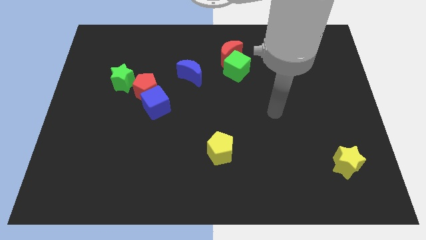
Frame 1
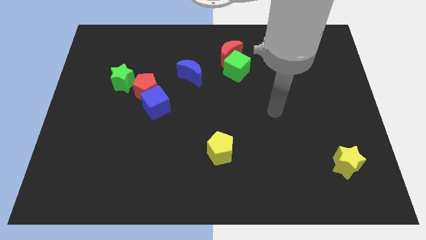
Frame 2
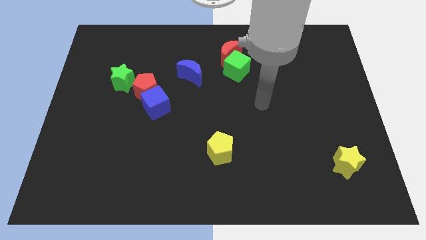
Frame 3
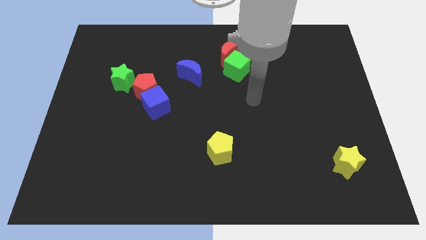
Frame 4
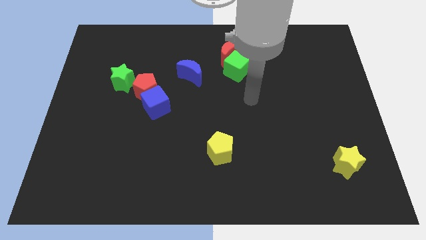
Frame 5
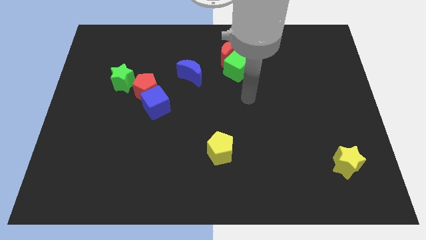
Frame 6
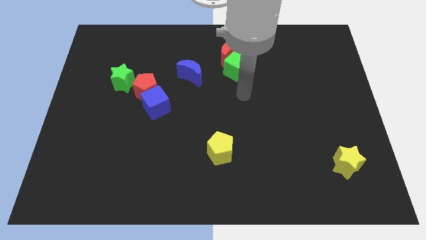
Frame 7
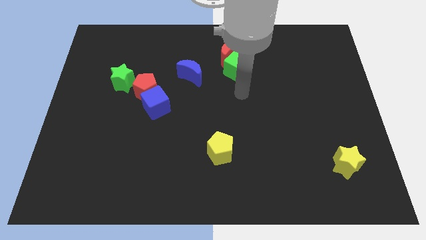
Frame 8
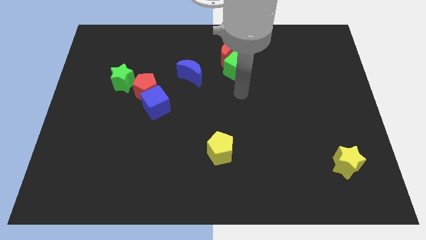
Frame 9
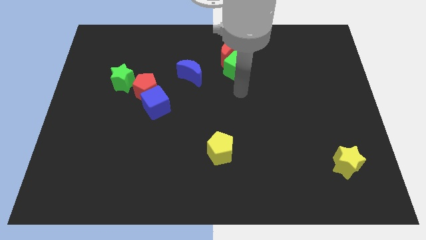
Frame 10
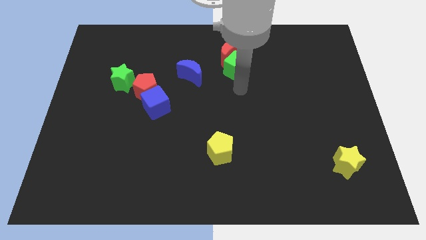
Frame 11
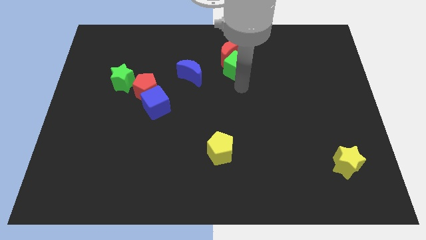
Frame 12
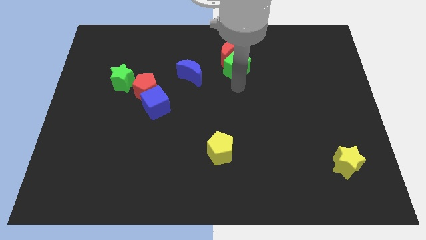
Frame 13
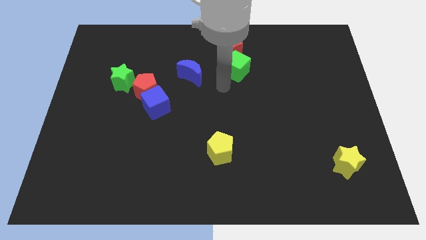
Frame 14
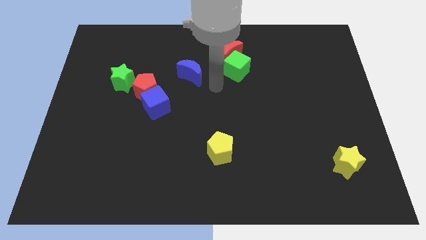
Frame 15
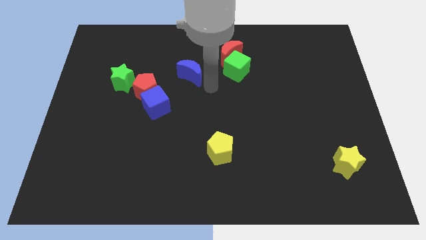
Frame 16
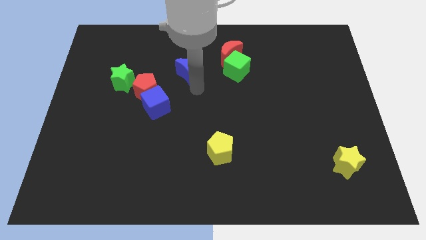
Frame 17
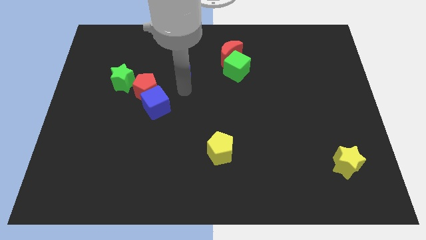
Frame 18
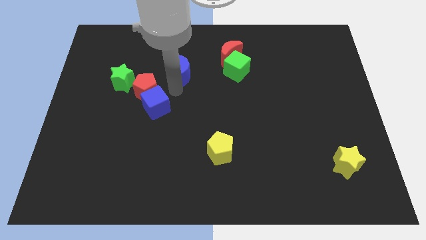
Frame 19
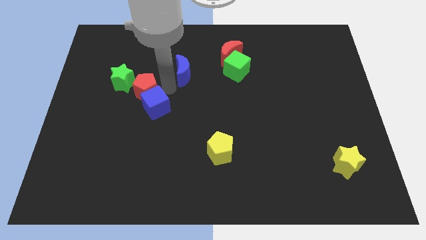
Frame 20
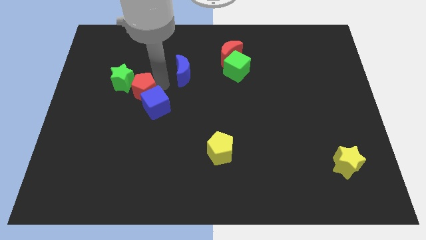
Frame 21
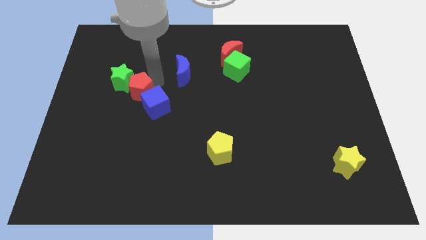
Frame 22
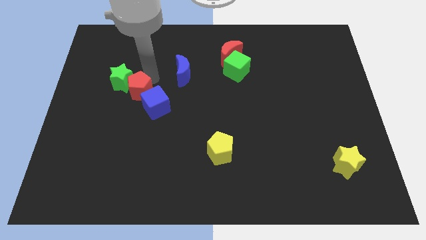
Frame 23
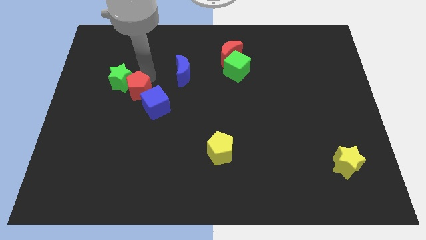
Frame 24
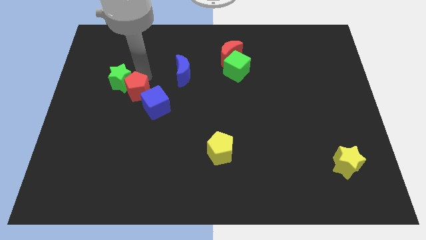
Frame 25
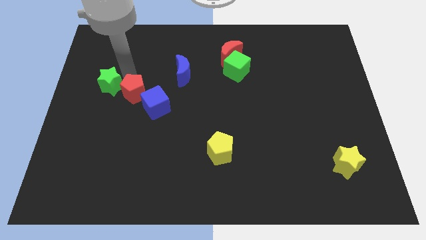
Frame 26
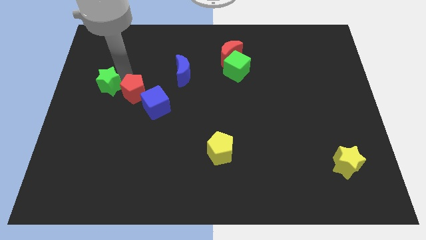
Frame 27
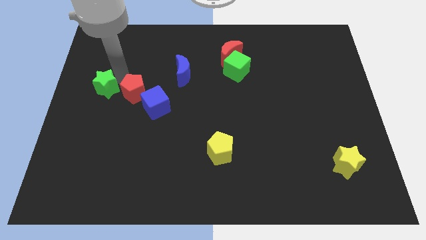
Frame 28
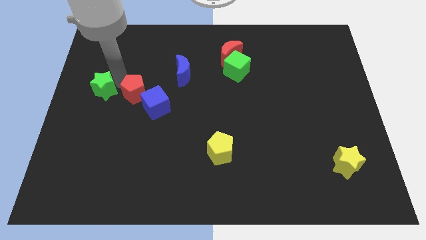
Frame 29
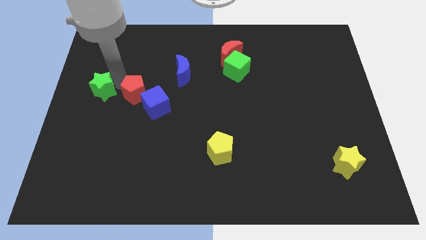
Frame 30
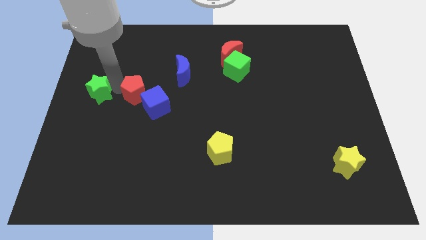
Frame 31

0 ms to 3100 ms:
push the green star to the left of the red pentagon

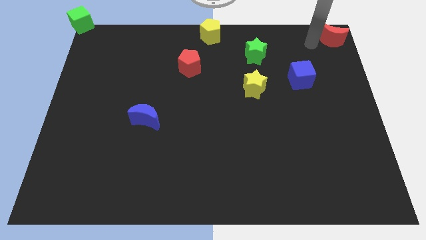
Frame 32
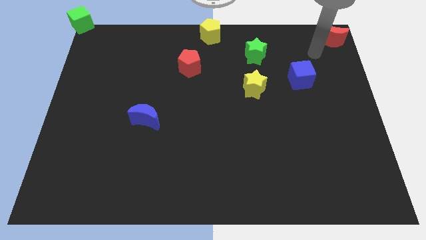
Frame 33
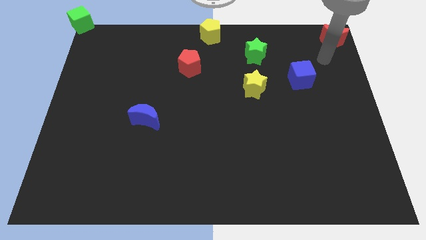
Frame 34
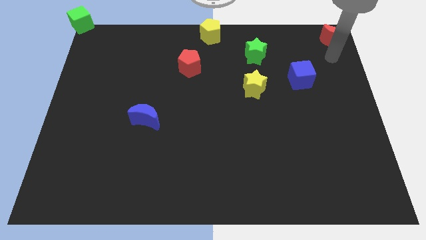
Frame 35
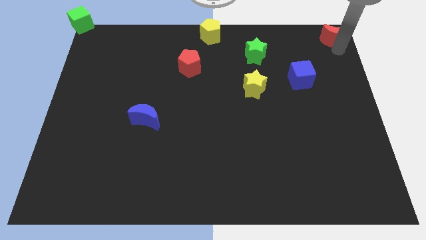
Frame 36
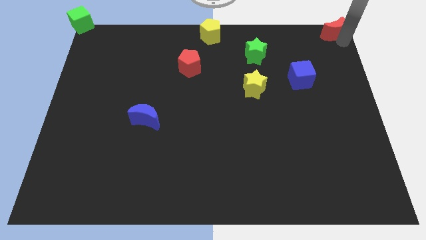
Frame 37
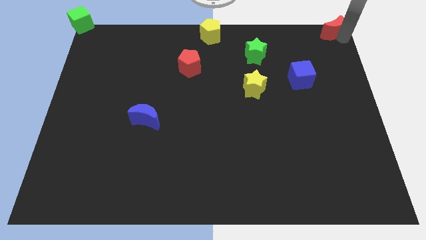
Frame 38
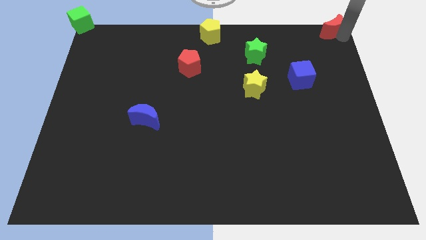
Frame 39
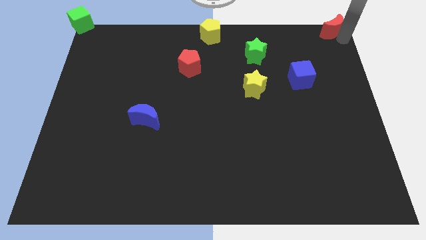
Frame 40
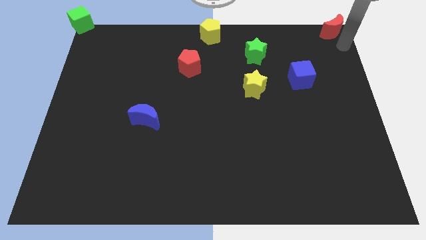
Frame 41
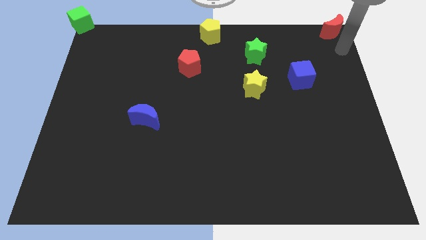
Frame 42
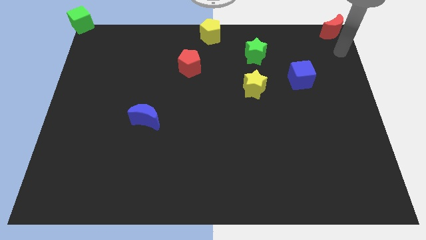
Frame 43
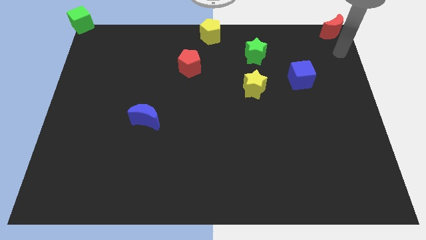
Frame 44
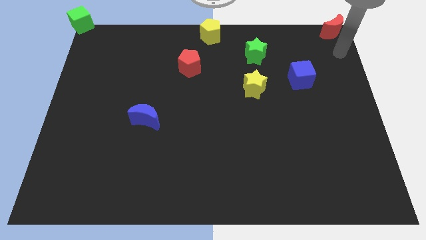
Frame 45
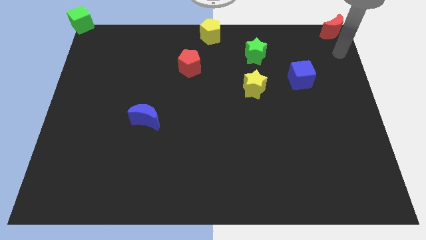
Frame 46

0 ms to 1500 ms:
push the red crescent towards the top right corner of the board

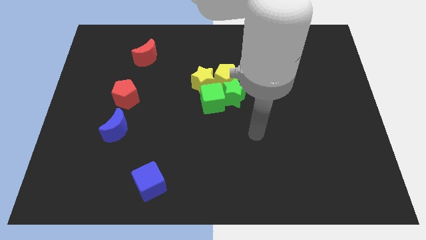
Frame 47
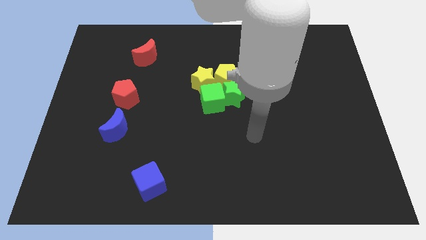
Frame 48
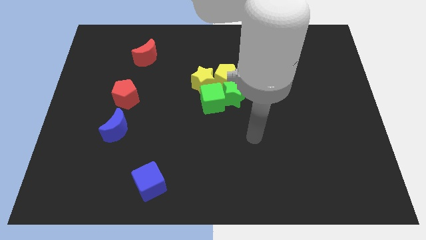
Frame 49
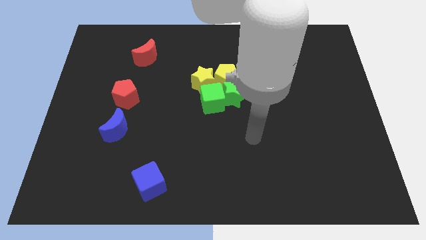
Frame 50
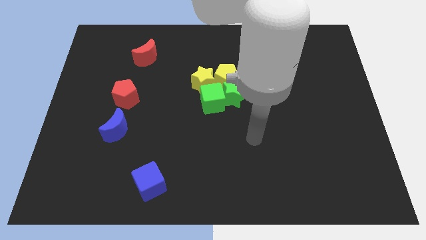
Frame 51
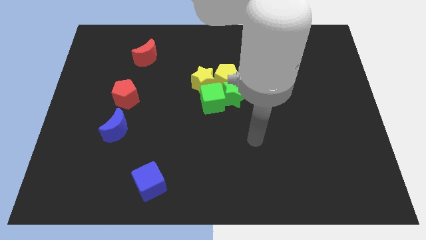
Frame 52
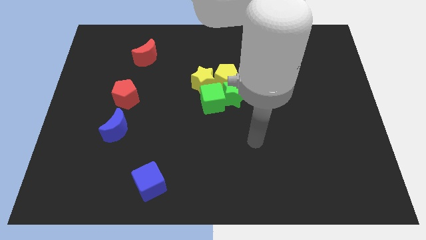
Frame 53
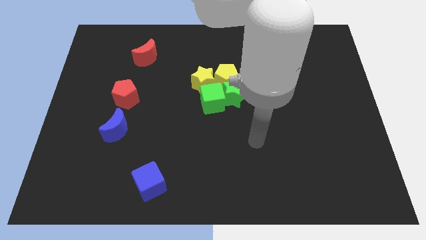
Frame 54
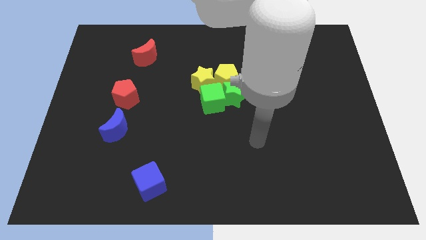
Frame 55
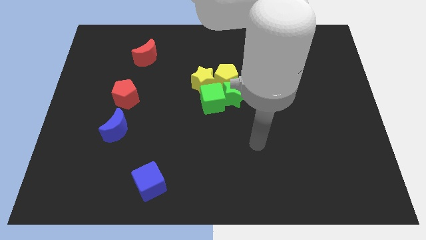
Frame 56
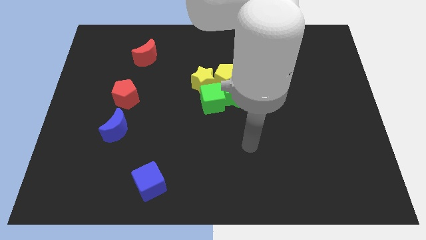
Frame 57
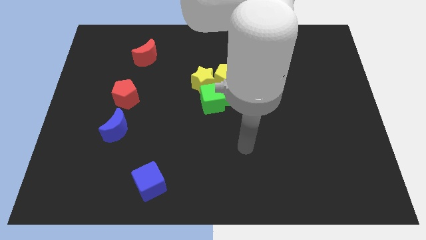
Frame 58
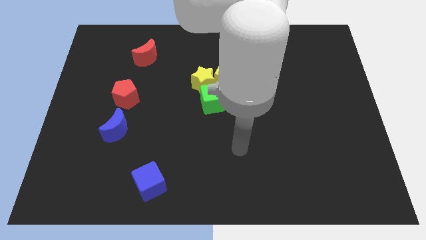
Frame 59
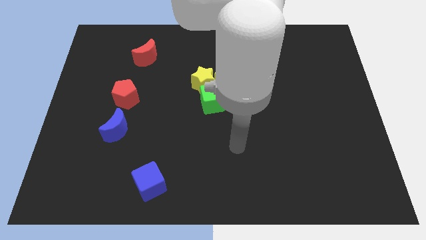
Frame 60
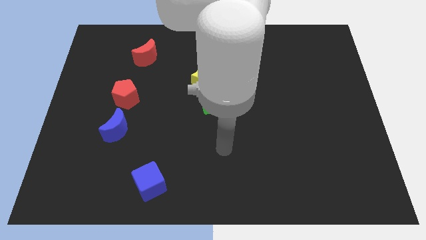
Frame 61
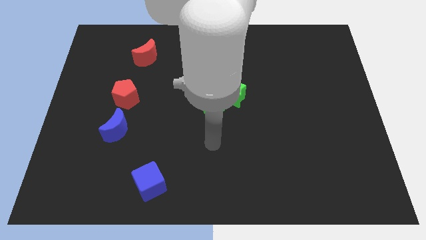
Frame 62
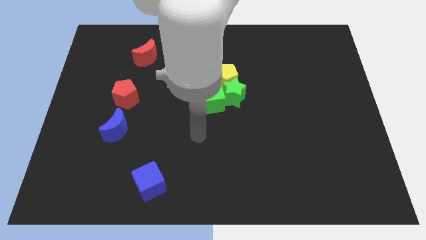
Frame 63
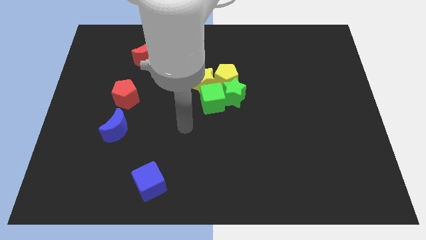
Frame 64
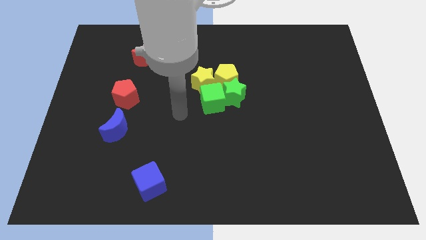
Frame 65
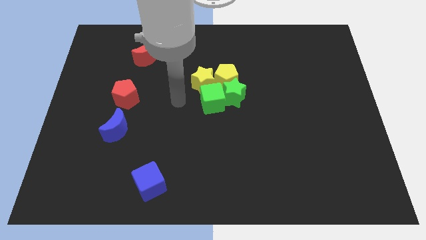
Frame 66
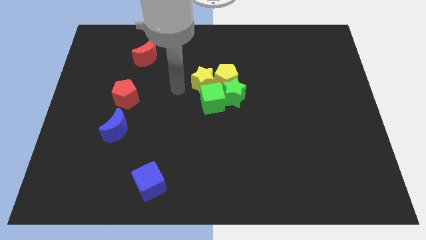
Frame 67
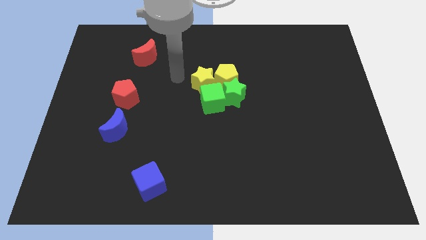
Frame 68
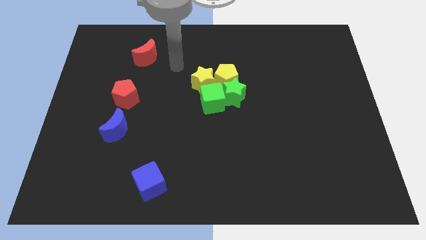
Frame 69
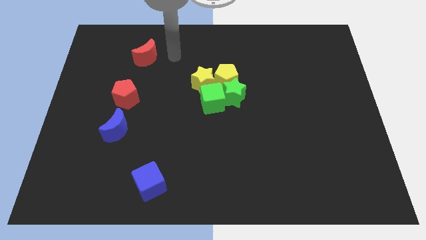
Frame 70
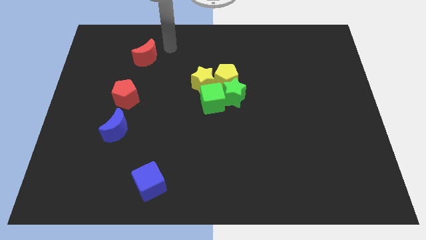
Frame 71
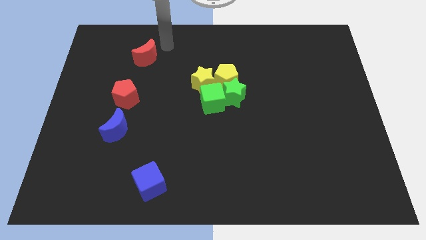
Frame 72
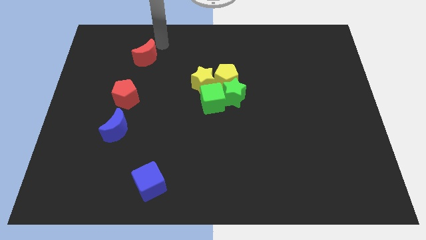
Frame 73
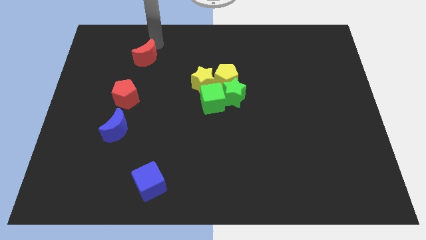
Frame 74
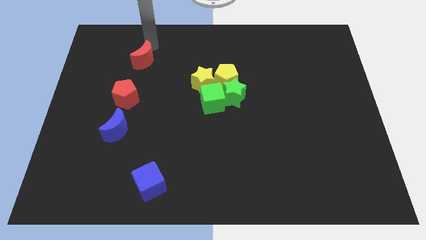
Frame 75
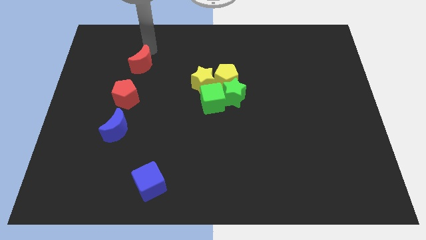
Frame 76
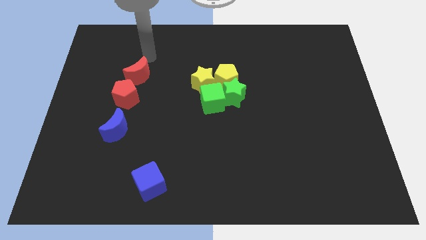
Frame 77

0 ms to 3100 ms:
move the red crescent close to the red pentagon

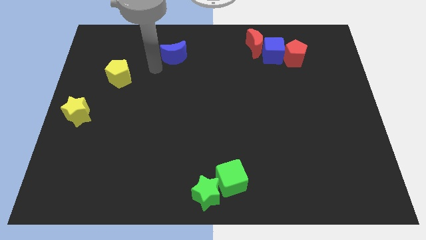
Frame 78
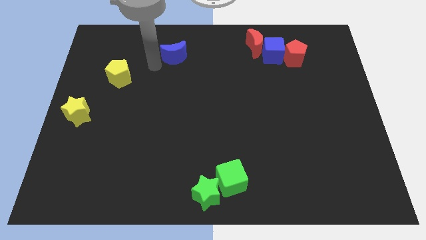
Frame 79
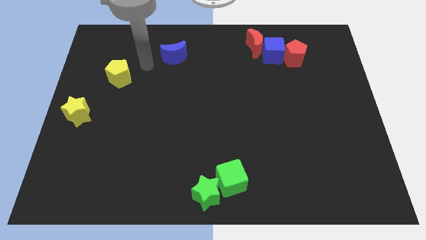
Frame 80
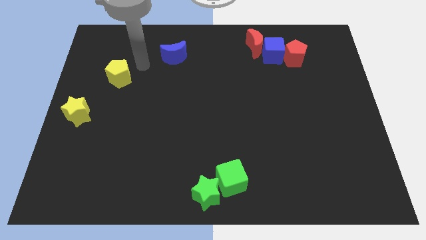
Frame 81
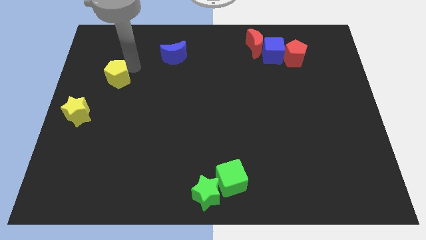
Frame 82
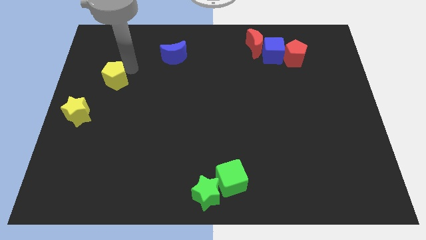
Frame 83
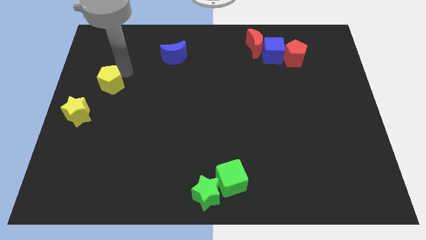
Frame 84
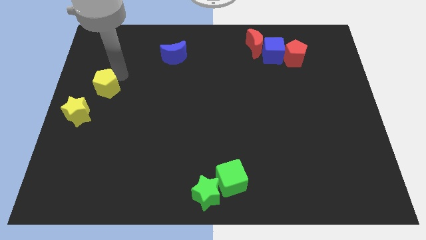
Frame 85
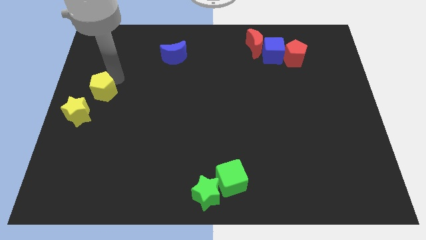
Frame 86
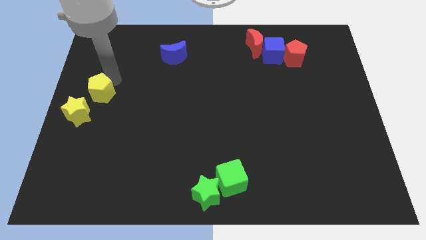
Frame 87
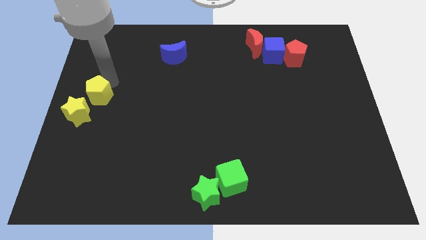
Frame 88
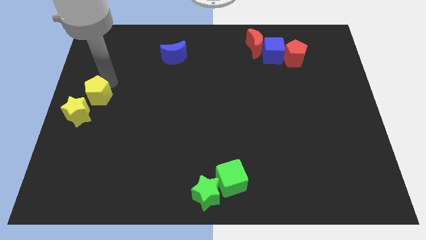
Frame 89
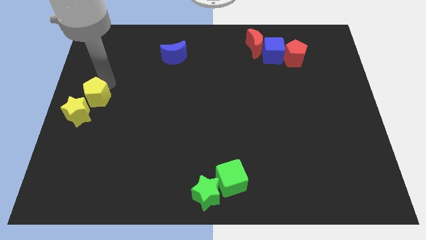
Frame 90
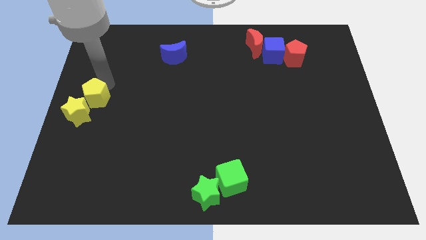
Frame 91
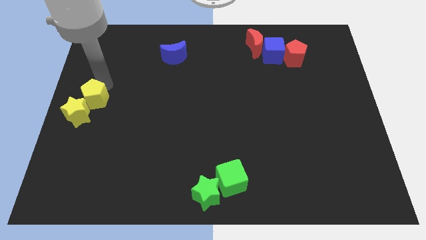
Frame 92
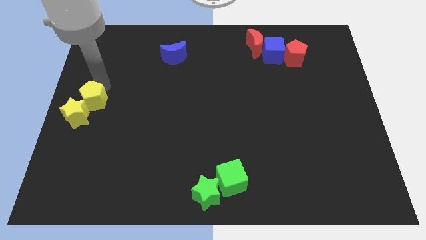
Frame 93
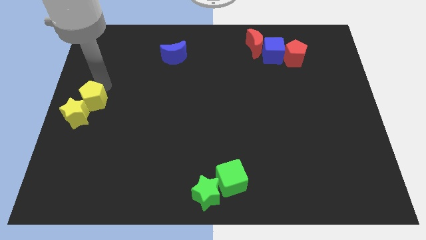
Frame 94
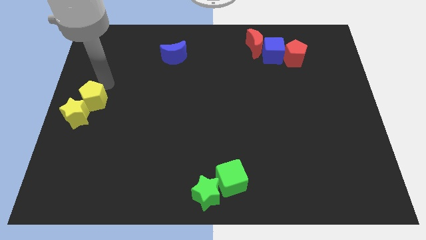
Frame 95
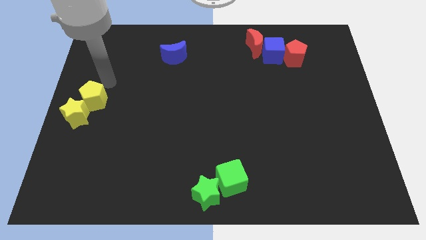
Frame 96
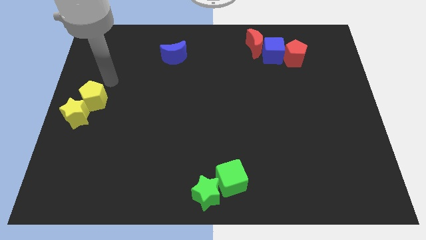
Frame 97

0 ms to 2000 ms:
push the yellow pentagon into the yellow star
